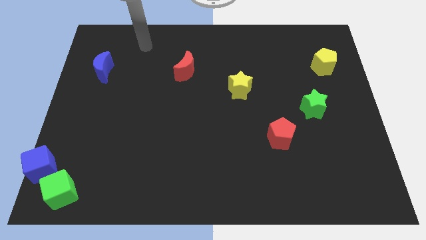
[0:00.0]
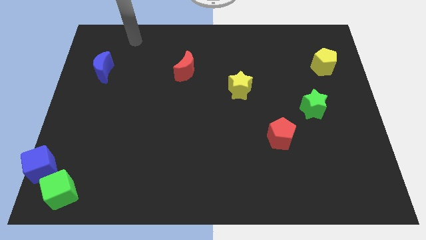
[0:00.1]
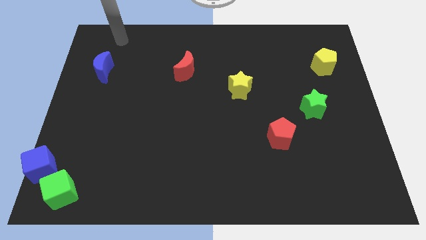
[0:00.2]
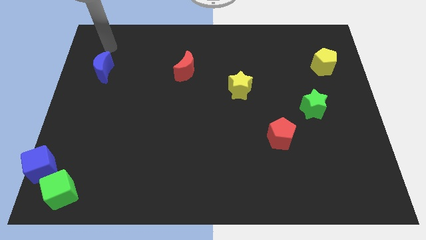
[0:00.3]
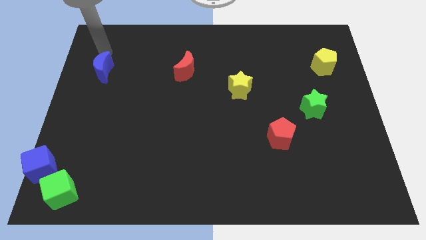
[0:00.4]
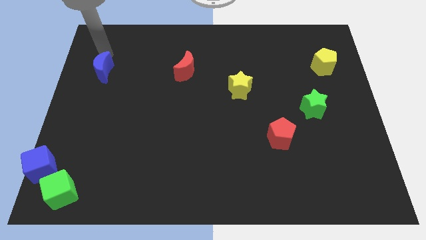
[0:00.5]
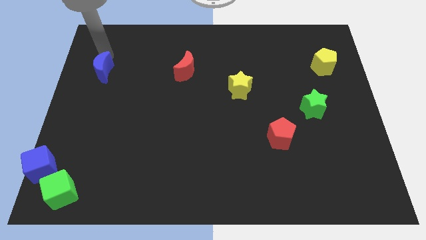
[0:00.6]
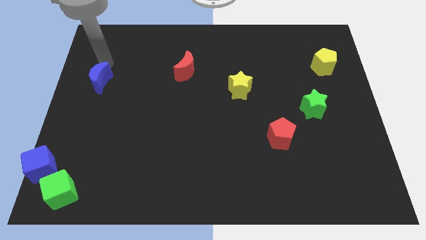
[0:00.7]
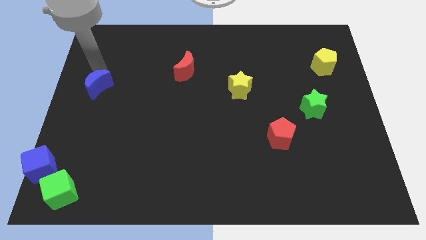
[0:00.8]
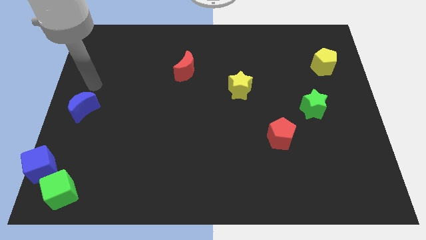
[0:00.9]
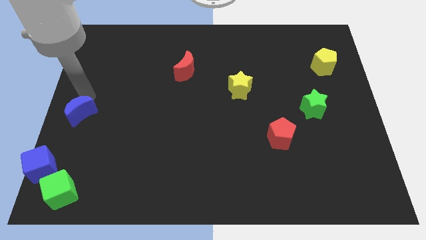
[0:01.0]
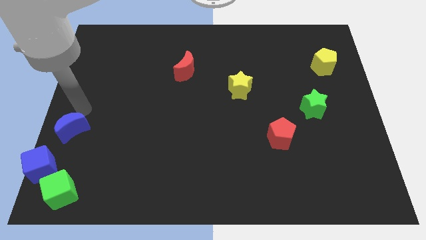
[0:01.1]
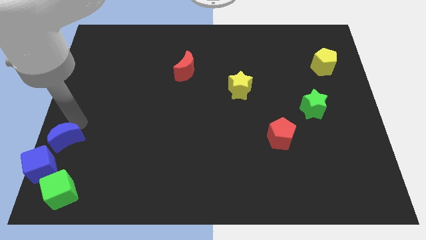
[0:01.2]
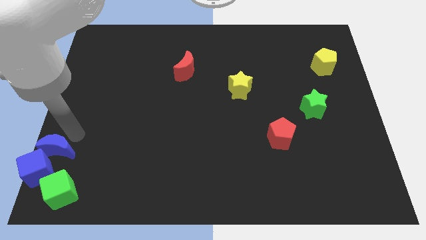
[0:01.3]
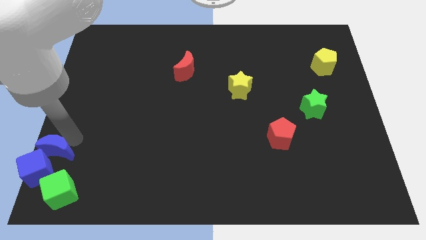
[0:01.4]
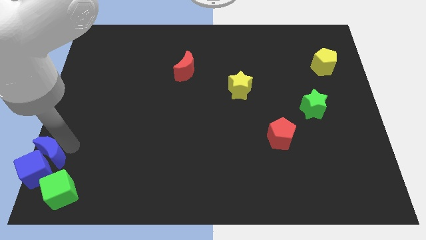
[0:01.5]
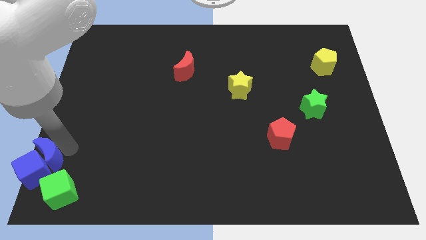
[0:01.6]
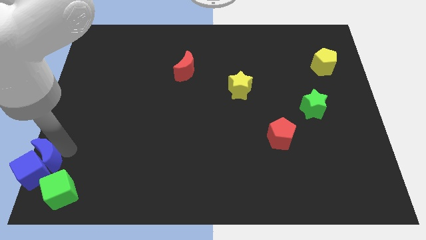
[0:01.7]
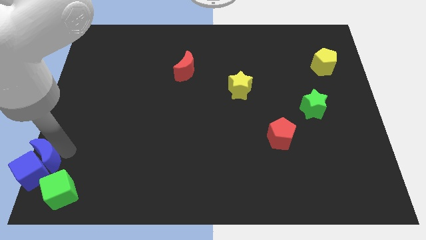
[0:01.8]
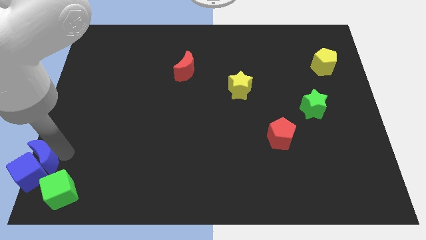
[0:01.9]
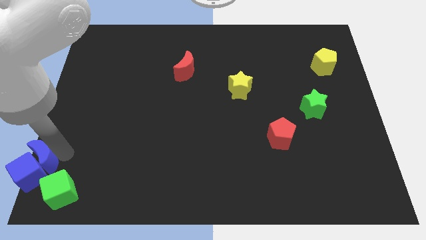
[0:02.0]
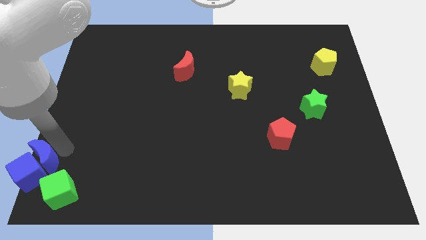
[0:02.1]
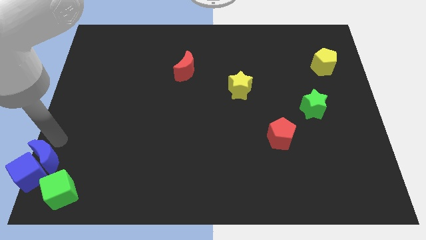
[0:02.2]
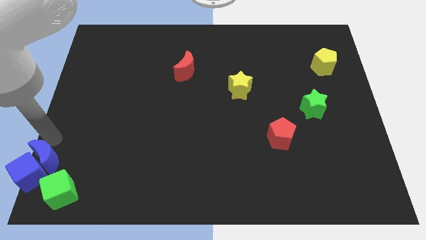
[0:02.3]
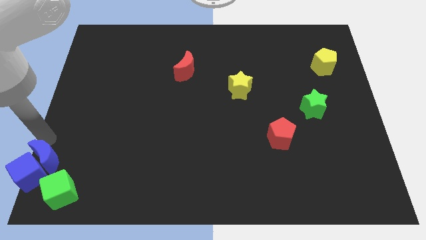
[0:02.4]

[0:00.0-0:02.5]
move the blue moon into the blue cube at the bottom

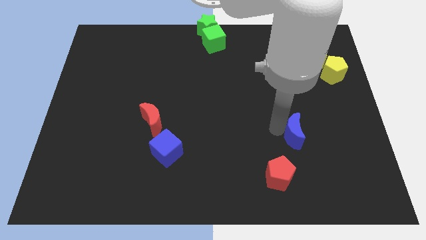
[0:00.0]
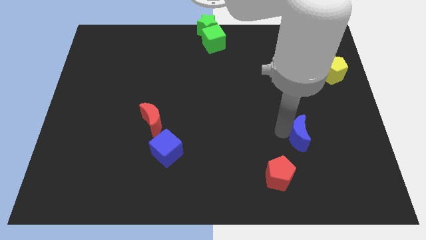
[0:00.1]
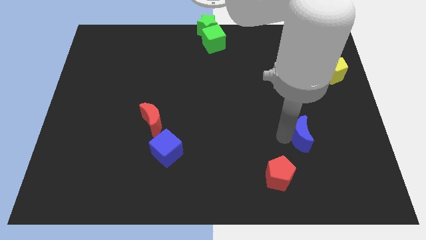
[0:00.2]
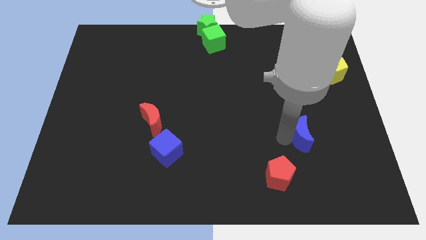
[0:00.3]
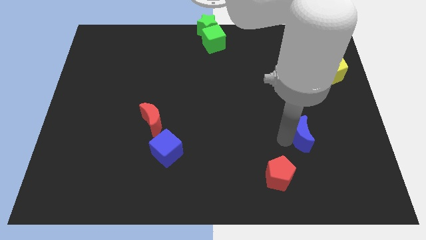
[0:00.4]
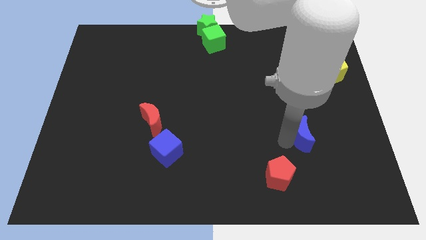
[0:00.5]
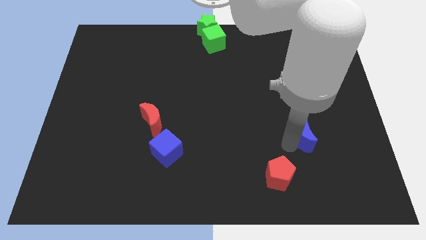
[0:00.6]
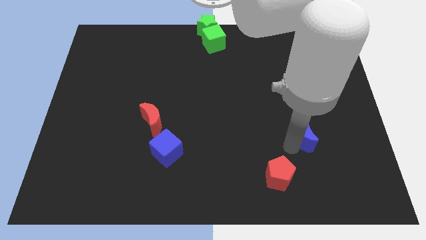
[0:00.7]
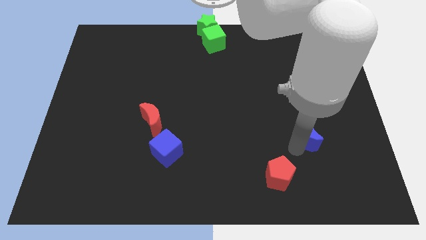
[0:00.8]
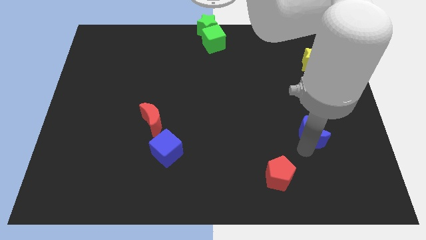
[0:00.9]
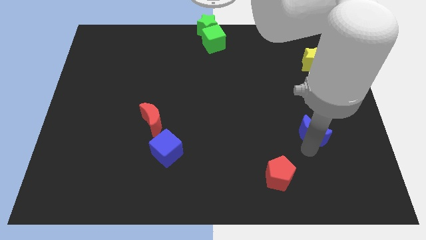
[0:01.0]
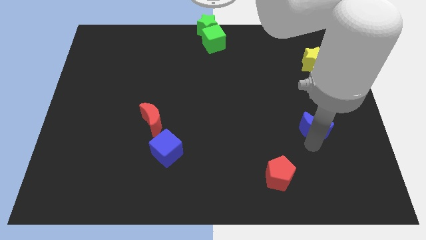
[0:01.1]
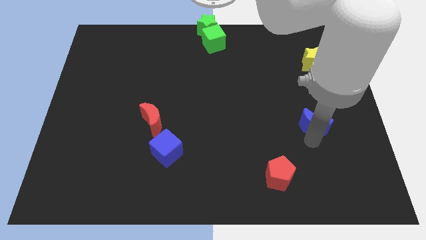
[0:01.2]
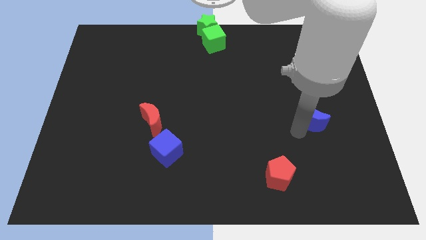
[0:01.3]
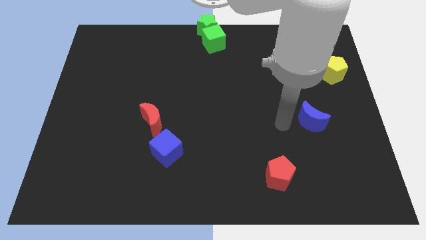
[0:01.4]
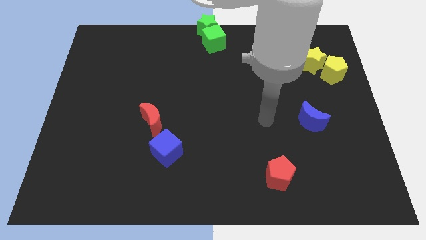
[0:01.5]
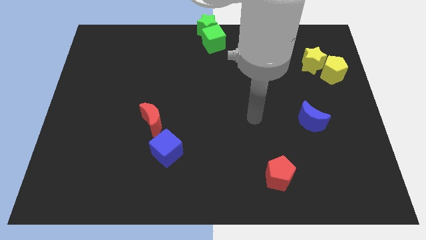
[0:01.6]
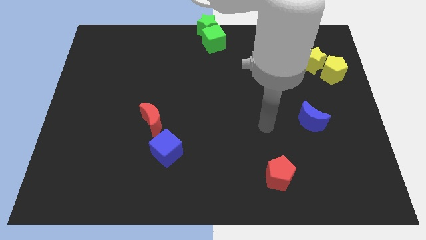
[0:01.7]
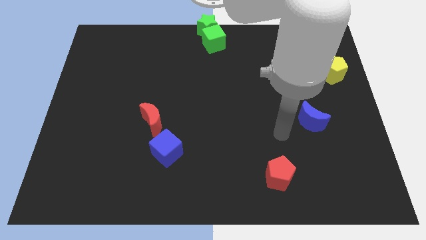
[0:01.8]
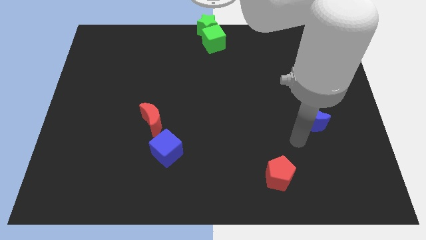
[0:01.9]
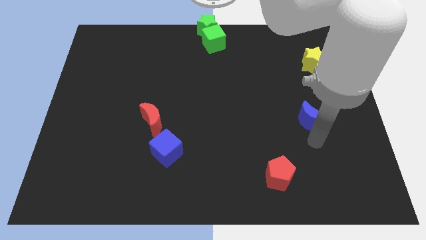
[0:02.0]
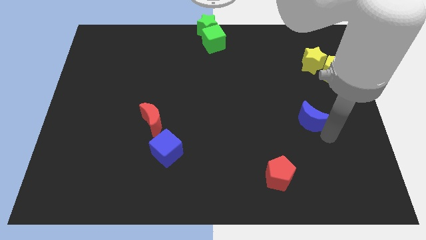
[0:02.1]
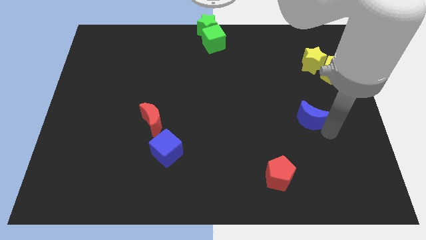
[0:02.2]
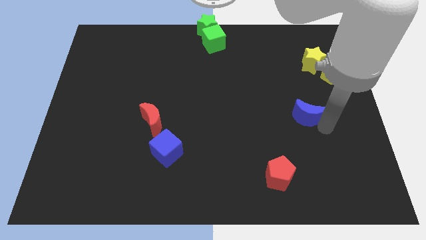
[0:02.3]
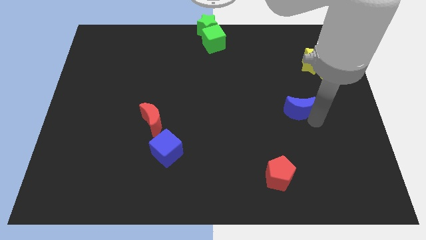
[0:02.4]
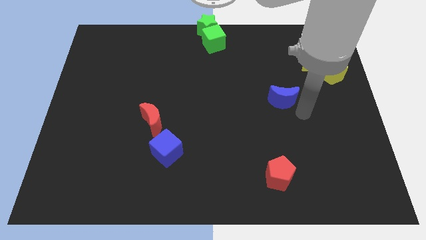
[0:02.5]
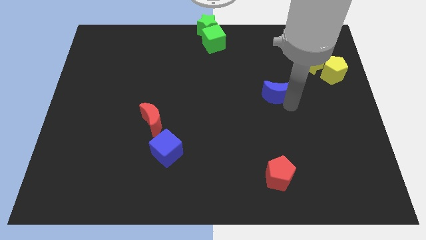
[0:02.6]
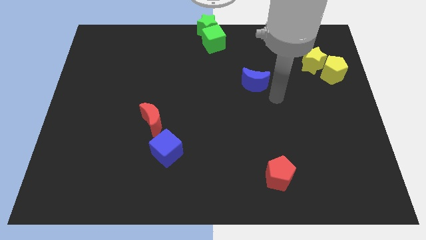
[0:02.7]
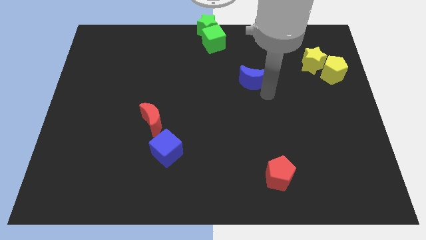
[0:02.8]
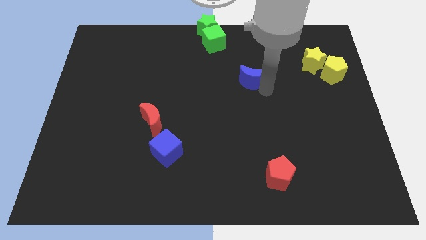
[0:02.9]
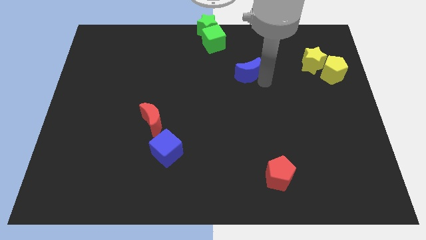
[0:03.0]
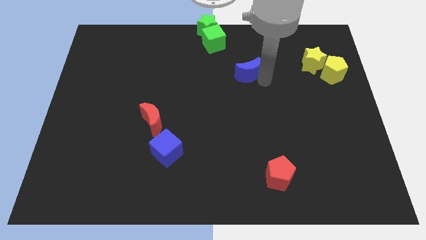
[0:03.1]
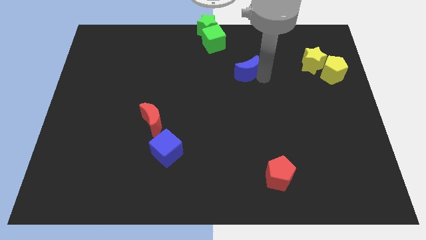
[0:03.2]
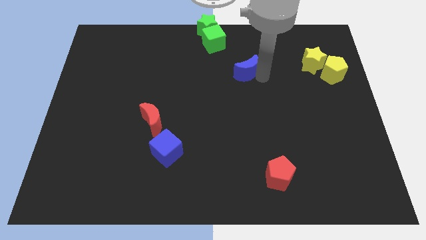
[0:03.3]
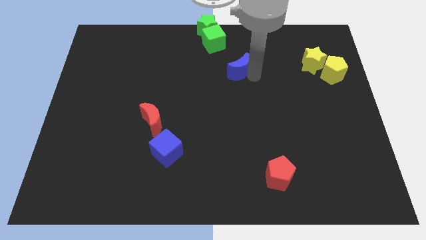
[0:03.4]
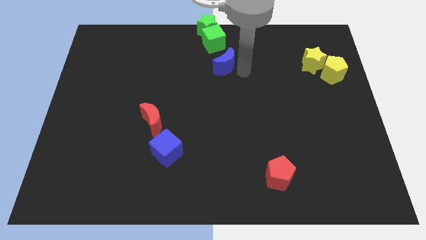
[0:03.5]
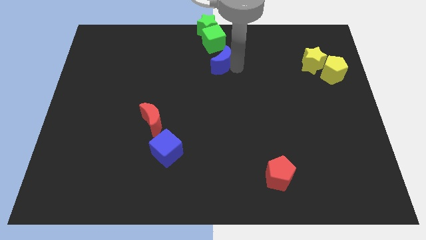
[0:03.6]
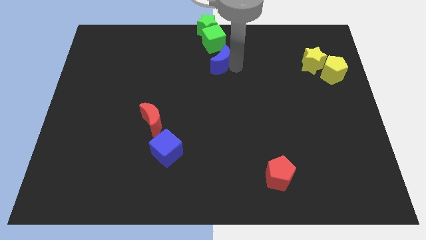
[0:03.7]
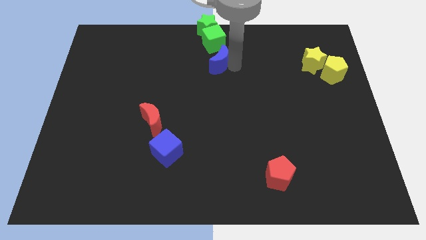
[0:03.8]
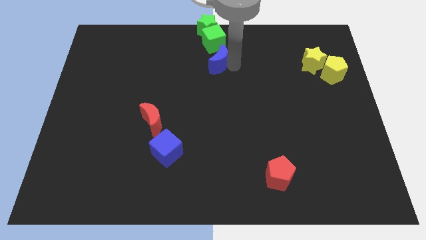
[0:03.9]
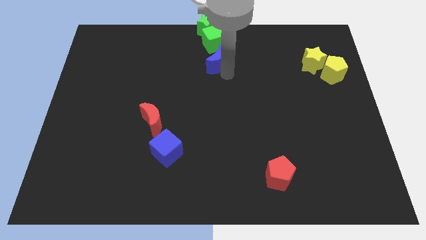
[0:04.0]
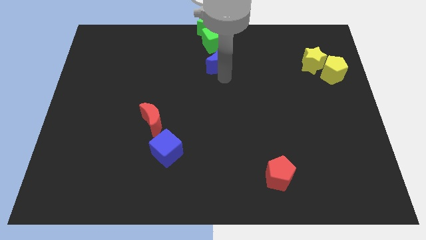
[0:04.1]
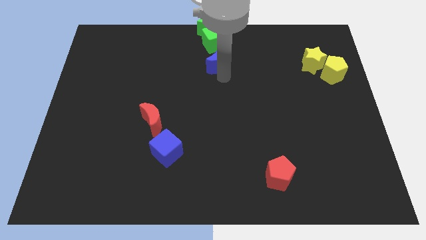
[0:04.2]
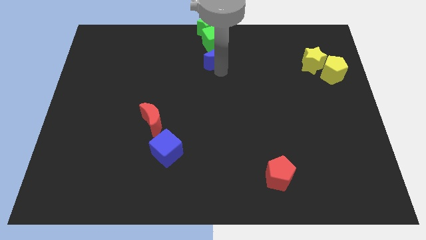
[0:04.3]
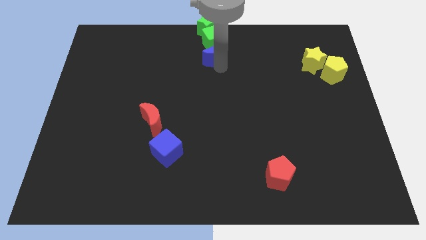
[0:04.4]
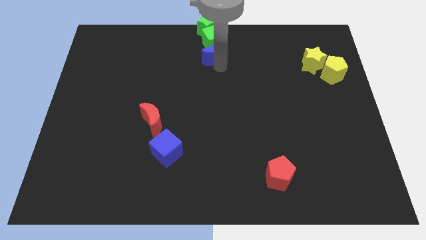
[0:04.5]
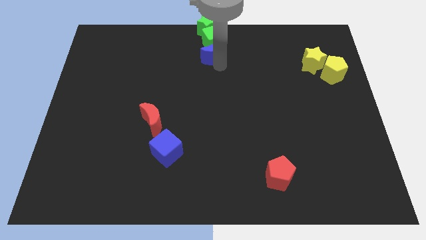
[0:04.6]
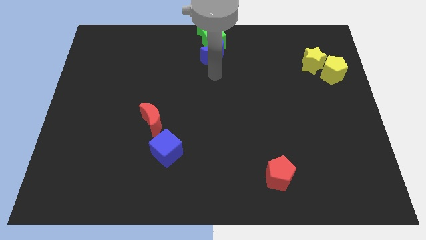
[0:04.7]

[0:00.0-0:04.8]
move the blue crescent to the bottom of the green cube

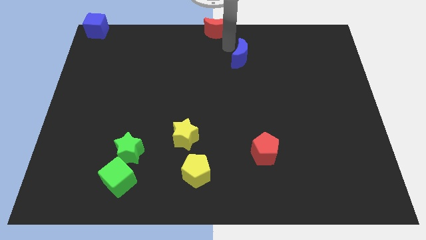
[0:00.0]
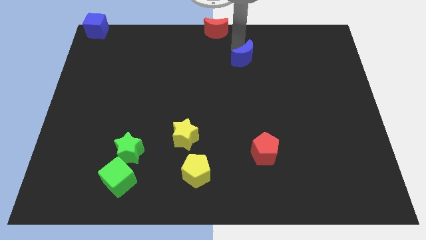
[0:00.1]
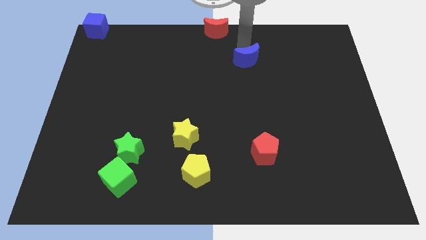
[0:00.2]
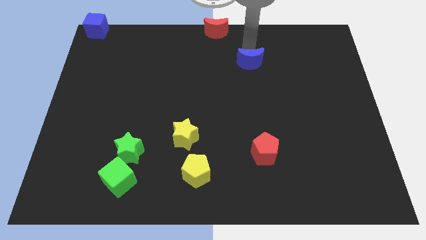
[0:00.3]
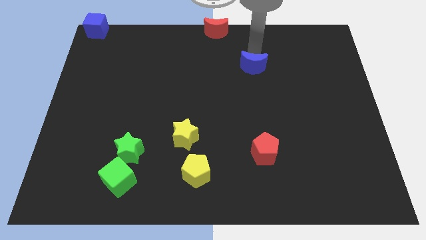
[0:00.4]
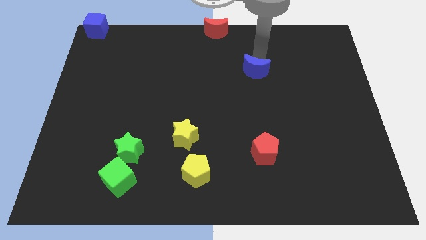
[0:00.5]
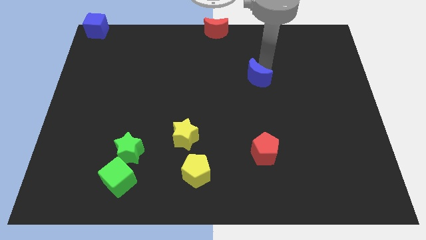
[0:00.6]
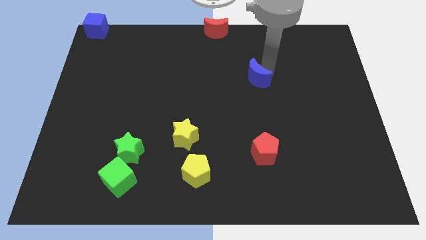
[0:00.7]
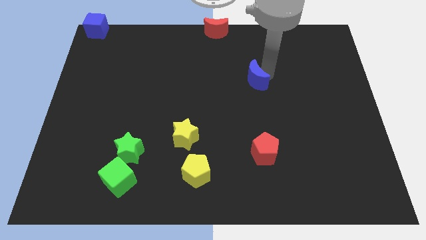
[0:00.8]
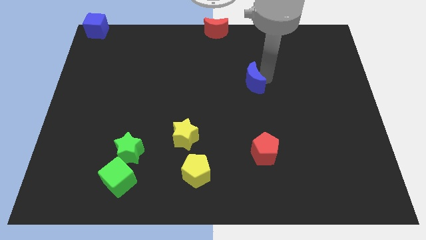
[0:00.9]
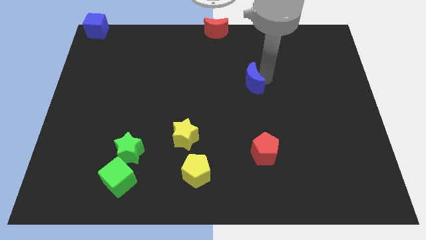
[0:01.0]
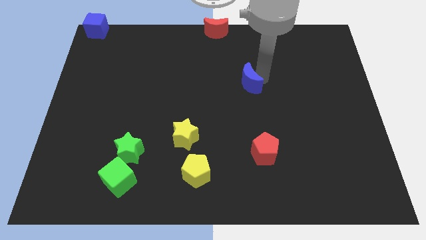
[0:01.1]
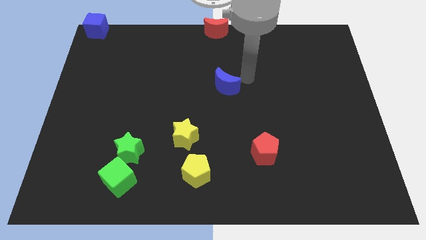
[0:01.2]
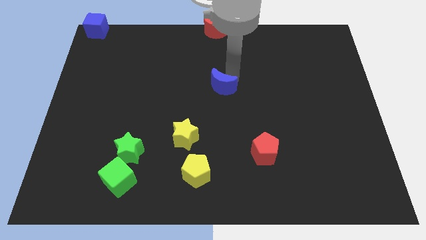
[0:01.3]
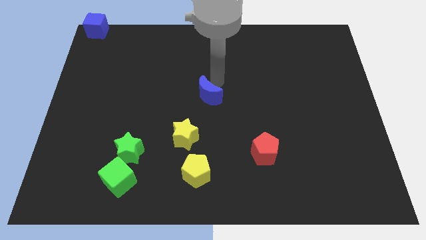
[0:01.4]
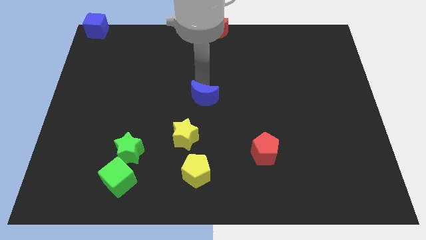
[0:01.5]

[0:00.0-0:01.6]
move the blue crescent to the top right of the yellow star

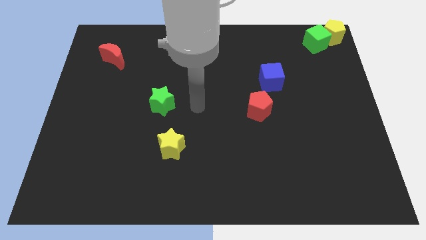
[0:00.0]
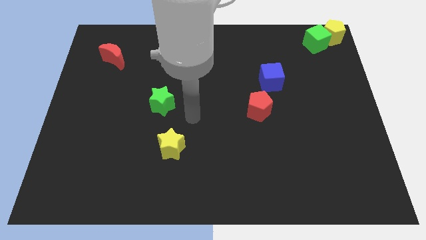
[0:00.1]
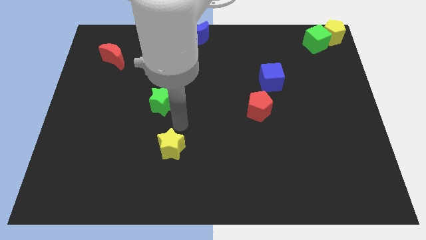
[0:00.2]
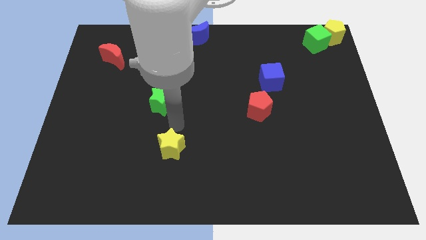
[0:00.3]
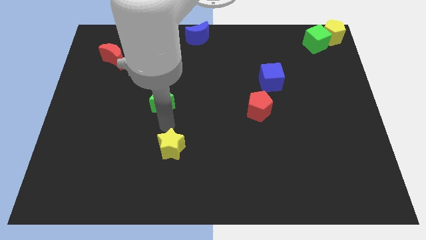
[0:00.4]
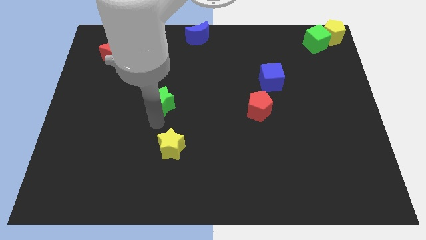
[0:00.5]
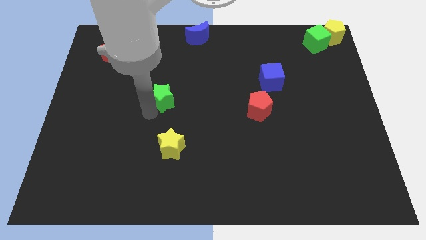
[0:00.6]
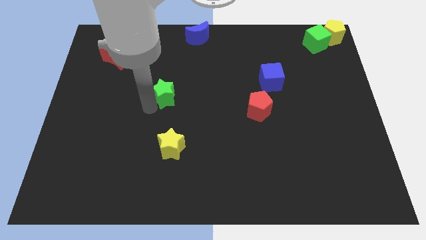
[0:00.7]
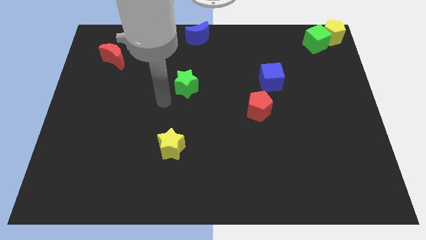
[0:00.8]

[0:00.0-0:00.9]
move the green star to the center of the board
